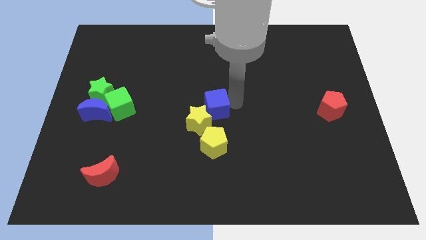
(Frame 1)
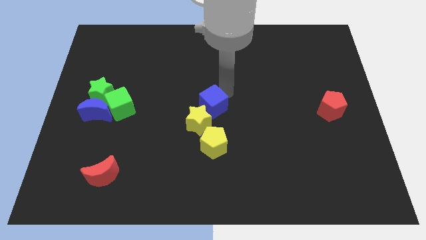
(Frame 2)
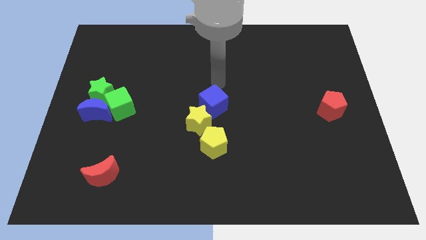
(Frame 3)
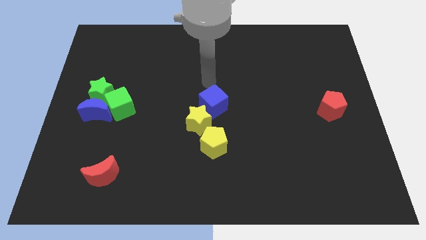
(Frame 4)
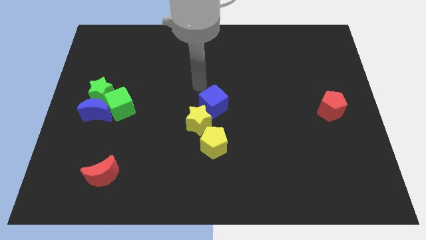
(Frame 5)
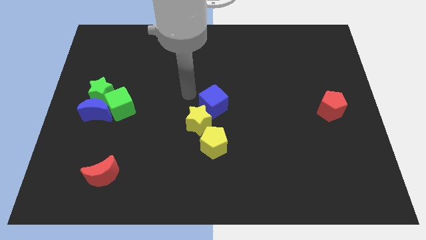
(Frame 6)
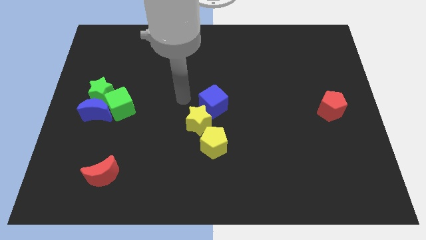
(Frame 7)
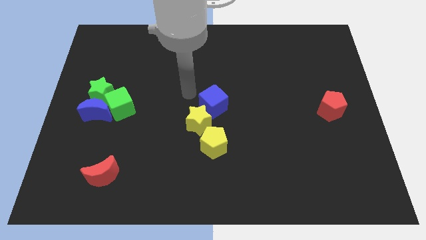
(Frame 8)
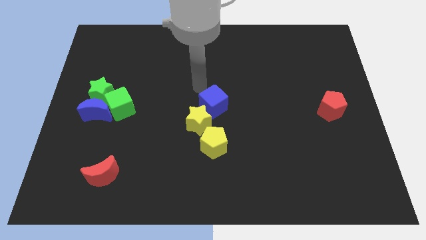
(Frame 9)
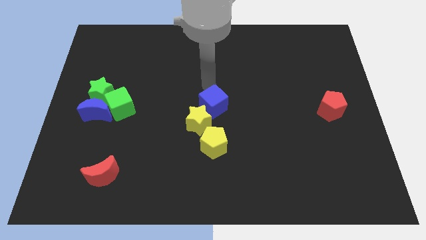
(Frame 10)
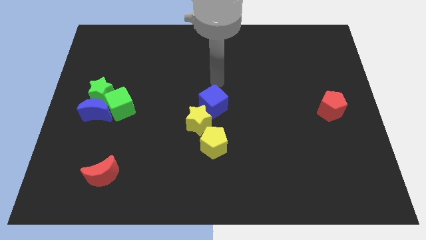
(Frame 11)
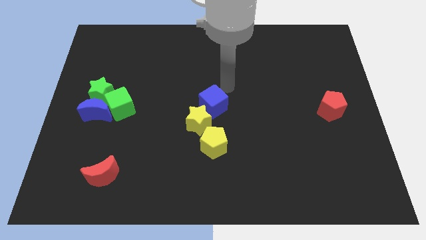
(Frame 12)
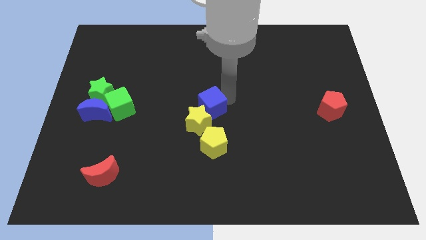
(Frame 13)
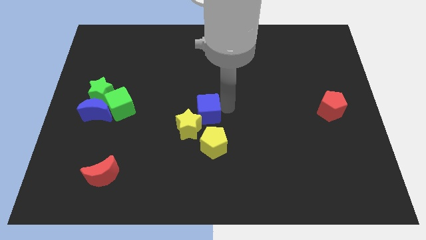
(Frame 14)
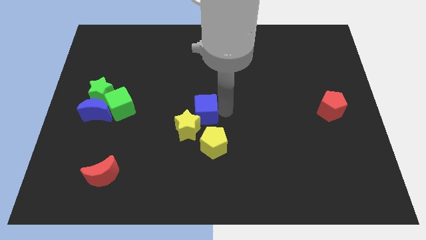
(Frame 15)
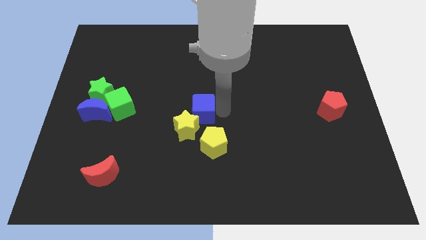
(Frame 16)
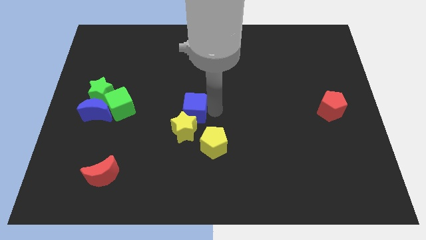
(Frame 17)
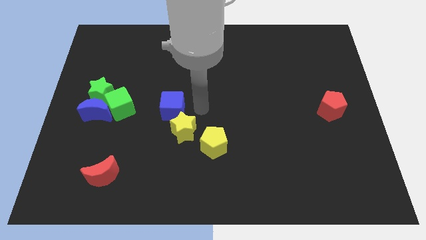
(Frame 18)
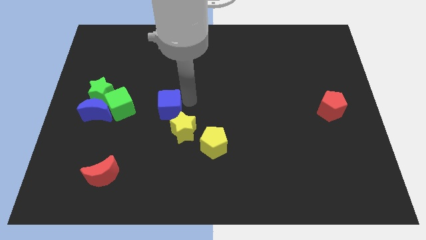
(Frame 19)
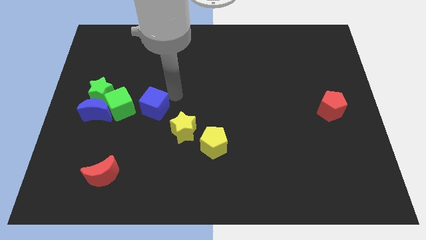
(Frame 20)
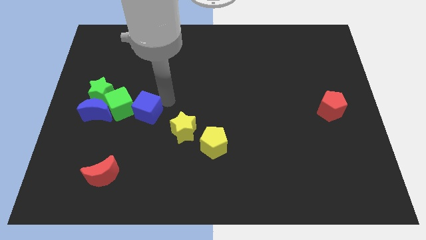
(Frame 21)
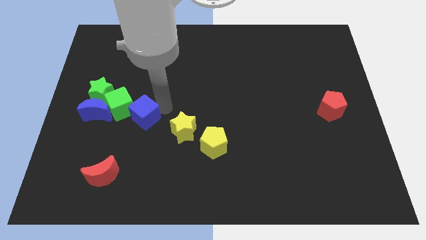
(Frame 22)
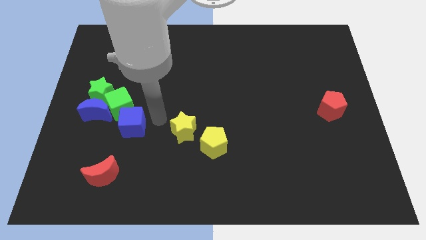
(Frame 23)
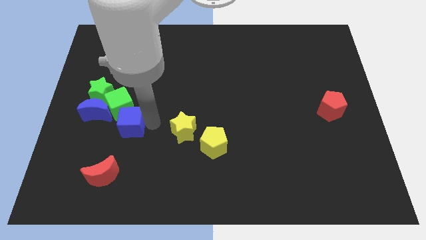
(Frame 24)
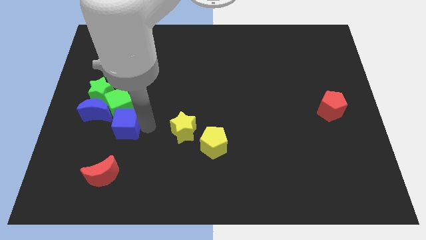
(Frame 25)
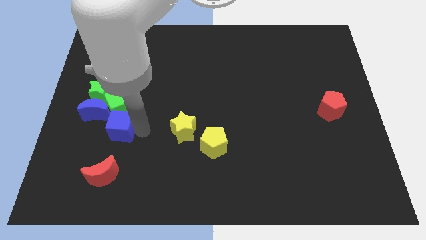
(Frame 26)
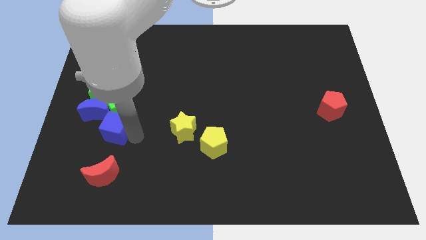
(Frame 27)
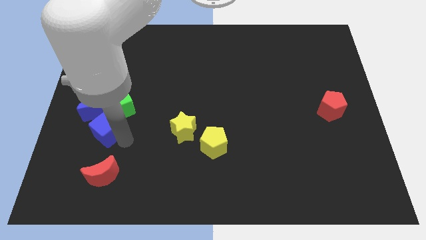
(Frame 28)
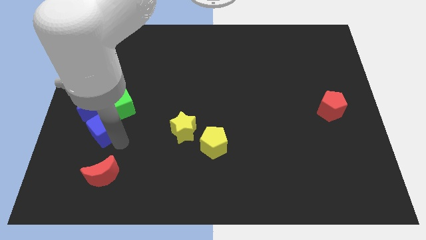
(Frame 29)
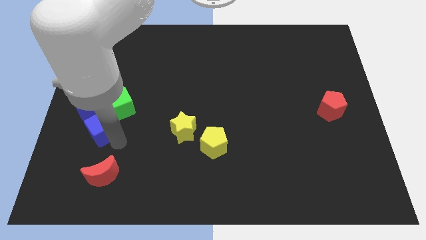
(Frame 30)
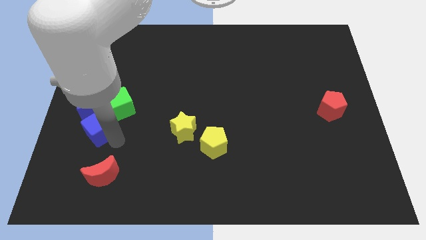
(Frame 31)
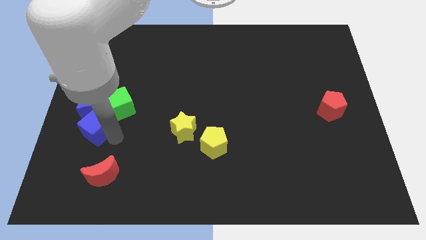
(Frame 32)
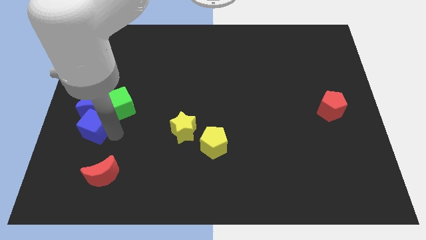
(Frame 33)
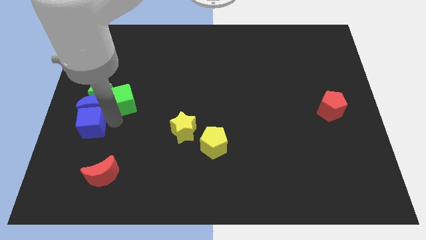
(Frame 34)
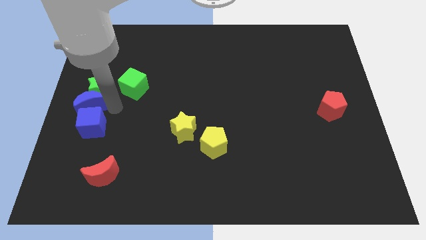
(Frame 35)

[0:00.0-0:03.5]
move the blue cube to the bottom of the blue crescent

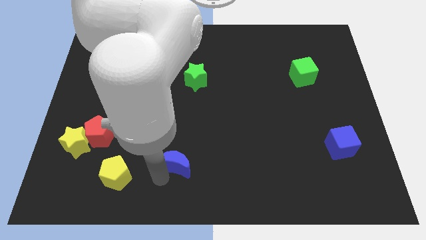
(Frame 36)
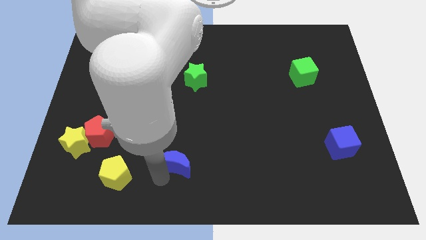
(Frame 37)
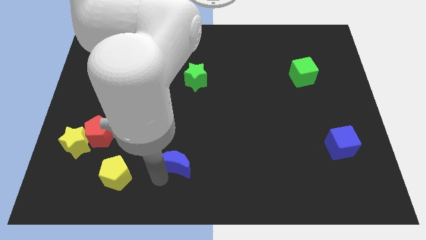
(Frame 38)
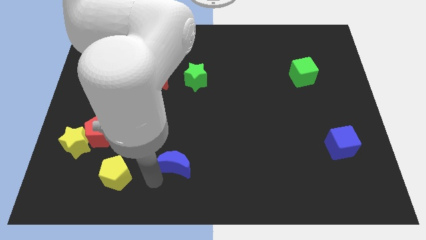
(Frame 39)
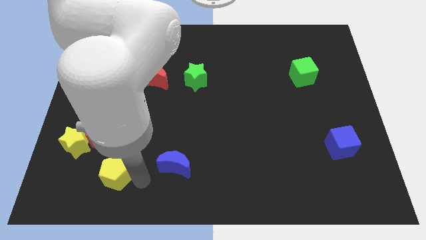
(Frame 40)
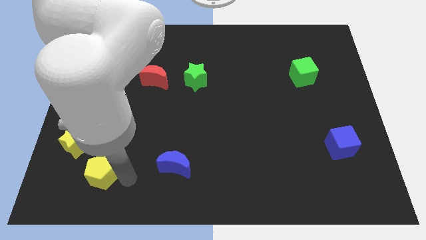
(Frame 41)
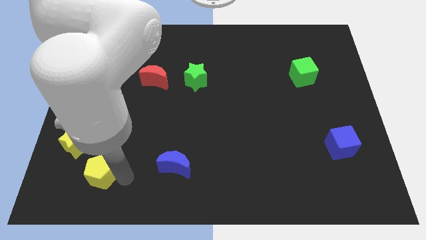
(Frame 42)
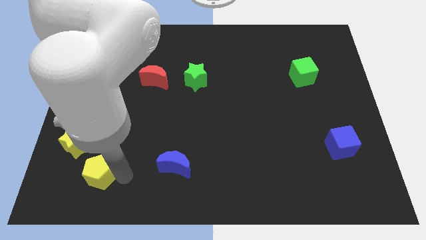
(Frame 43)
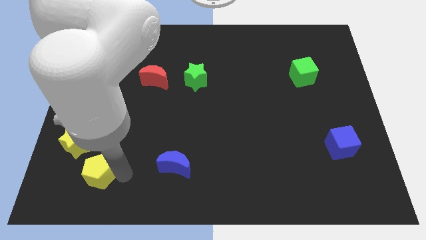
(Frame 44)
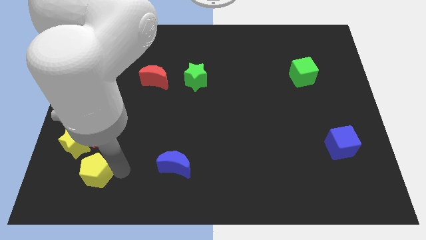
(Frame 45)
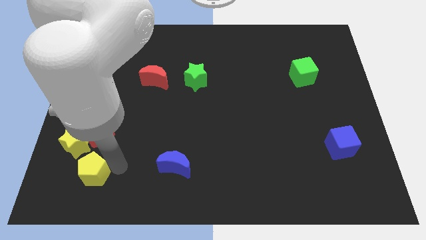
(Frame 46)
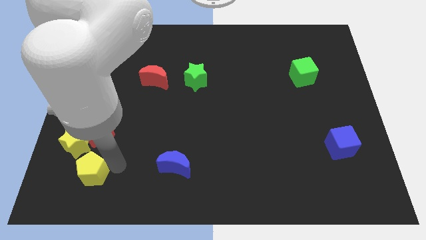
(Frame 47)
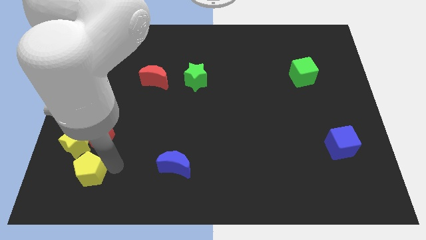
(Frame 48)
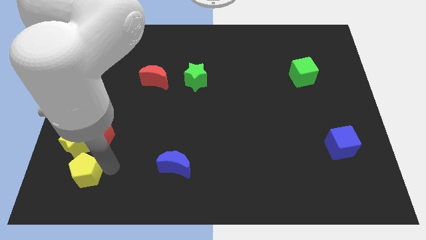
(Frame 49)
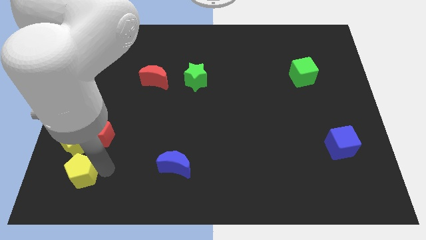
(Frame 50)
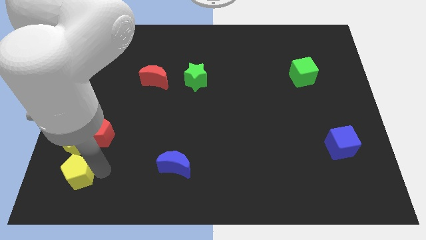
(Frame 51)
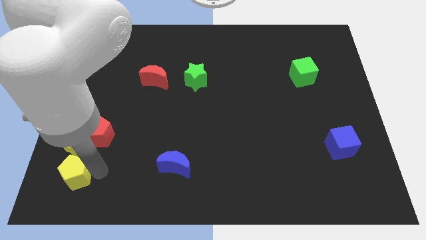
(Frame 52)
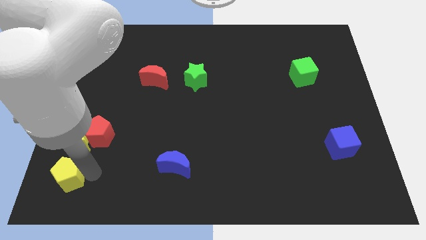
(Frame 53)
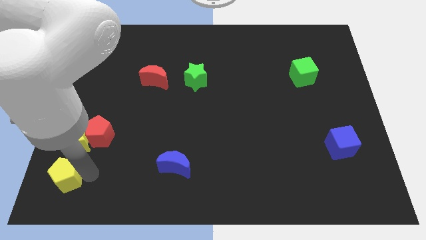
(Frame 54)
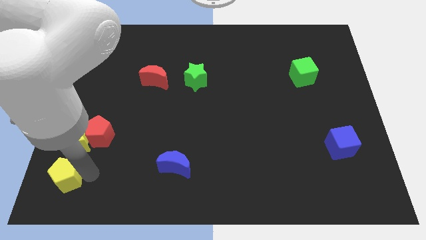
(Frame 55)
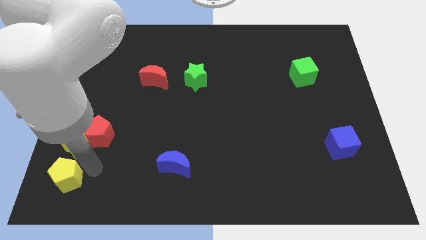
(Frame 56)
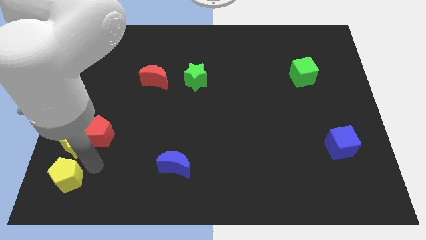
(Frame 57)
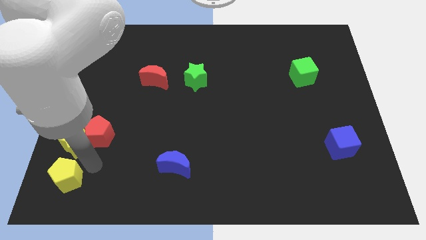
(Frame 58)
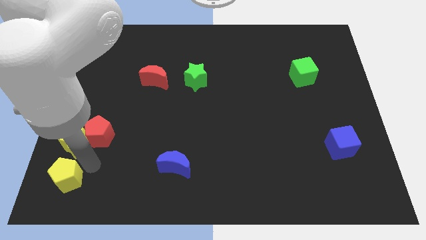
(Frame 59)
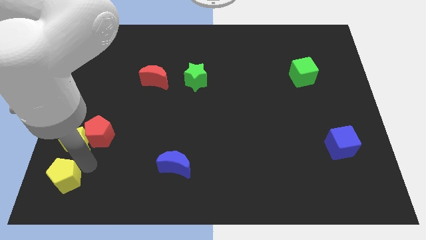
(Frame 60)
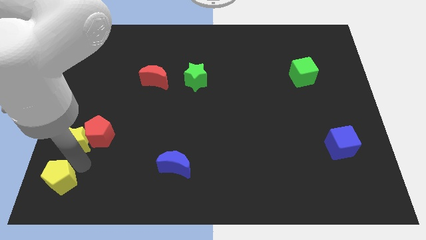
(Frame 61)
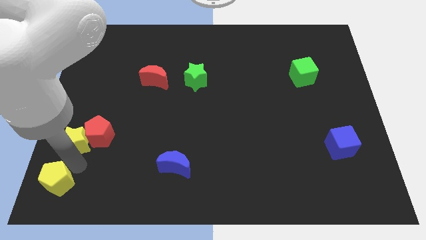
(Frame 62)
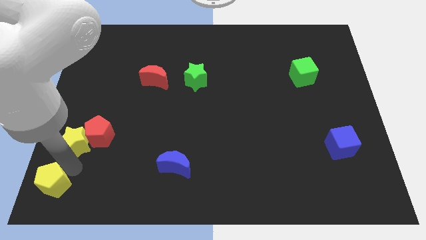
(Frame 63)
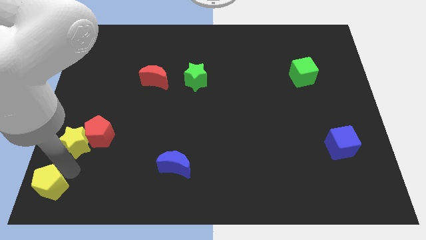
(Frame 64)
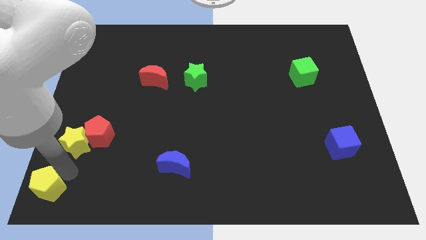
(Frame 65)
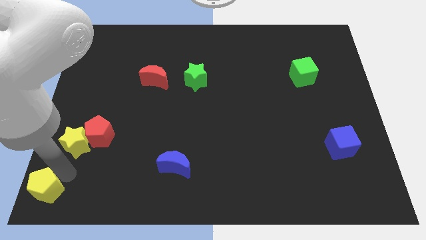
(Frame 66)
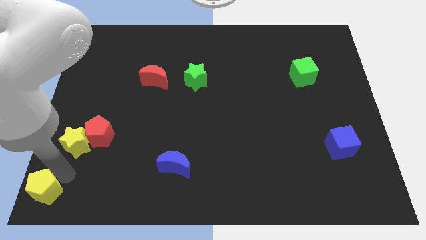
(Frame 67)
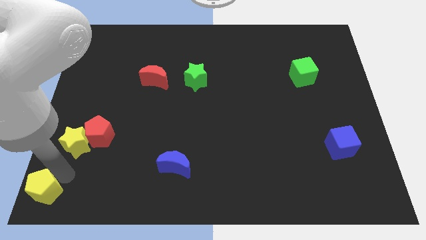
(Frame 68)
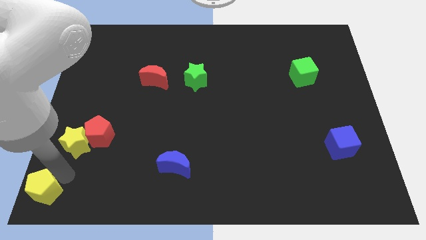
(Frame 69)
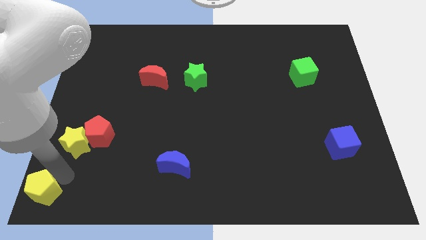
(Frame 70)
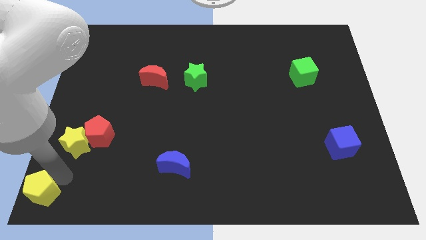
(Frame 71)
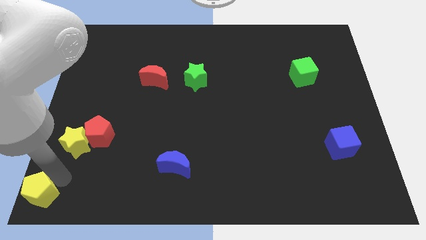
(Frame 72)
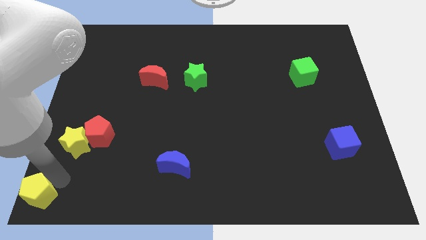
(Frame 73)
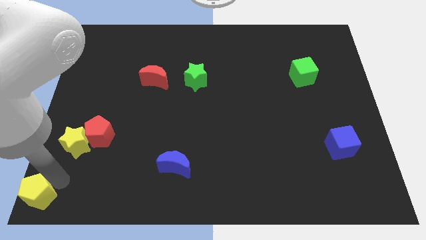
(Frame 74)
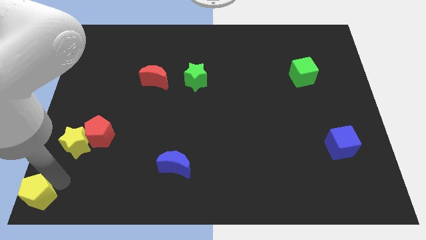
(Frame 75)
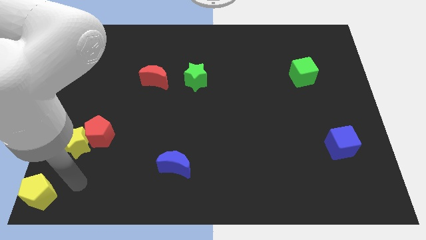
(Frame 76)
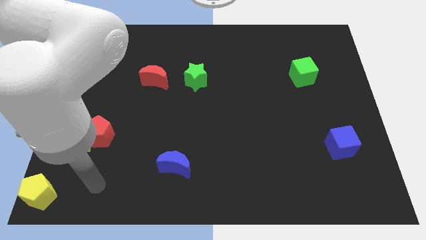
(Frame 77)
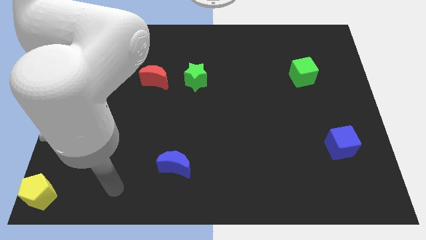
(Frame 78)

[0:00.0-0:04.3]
place the yellow pentagon at the bottom left corner of the board

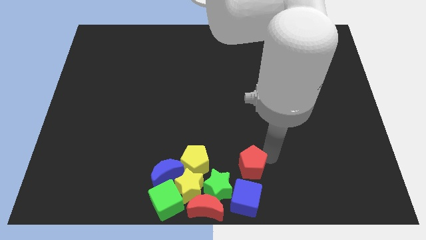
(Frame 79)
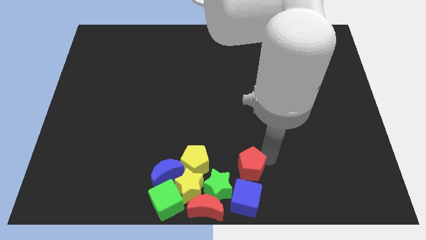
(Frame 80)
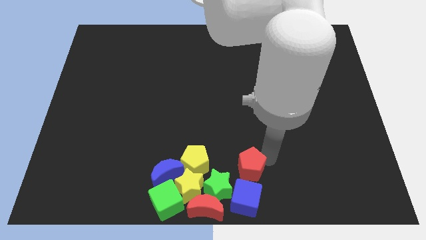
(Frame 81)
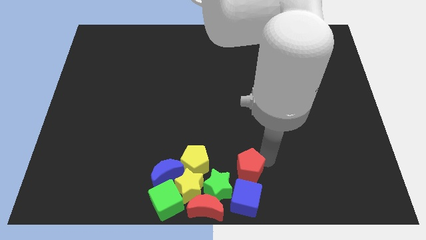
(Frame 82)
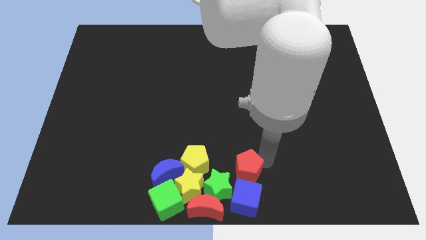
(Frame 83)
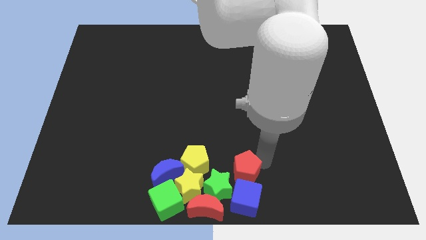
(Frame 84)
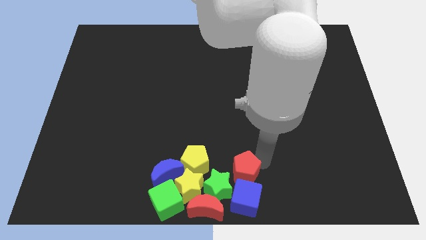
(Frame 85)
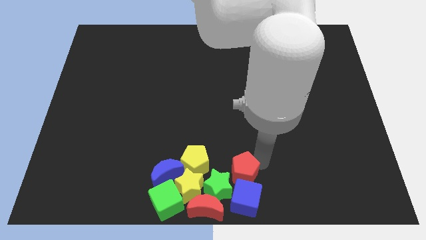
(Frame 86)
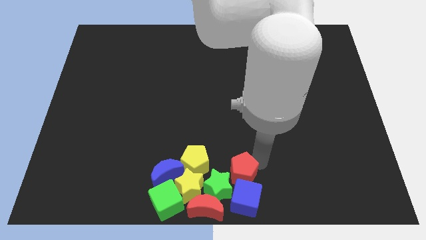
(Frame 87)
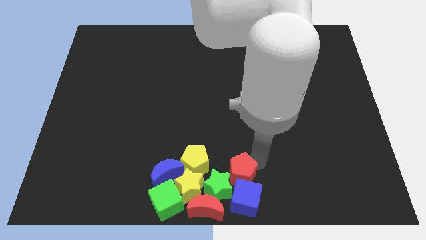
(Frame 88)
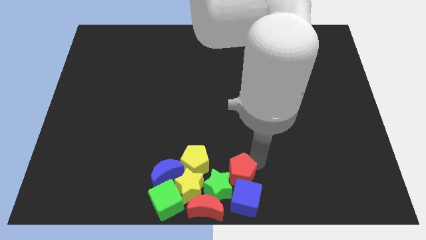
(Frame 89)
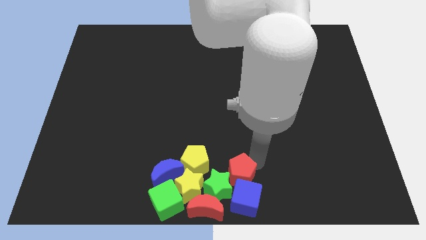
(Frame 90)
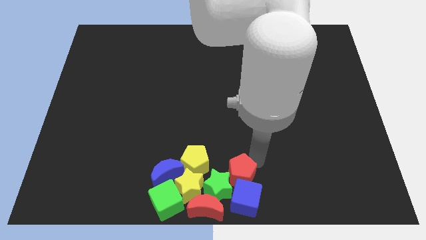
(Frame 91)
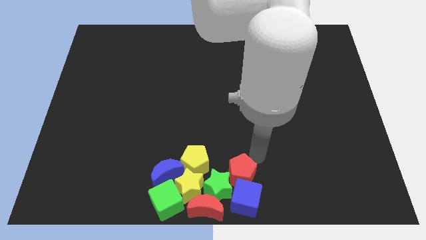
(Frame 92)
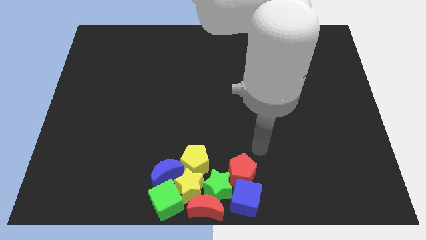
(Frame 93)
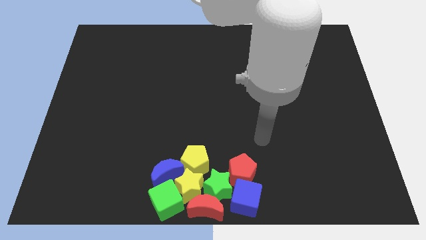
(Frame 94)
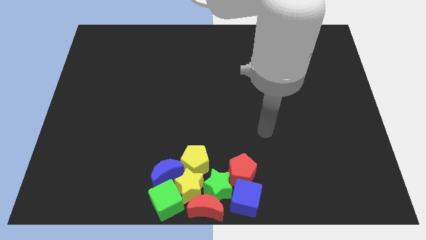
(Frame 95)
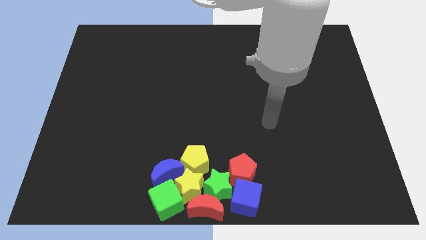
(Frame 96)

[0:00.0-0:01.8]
place the red pentagon towards the top right side of the green star
